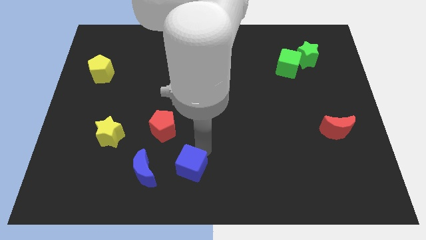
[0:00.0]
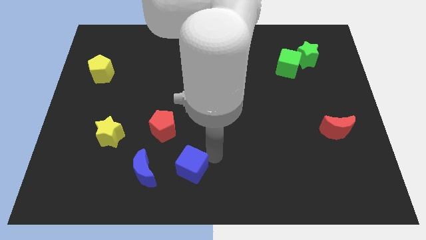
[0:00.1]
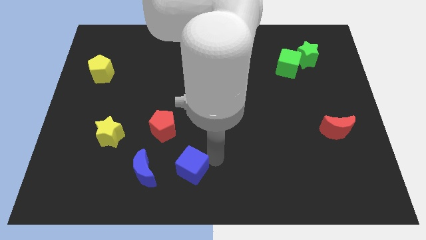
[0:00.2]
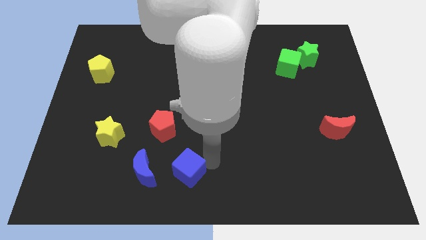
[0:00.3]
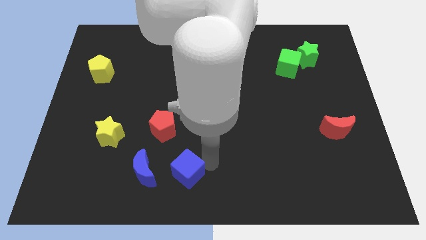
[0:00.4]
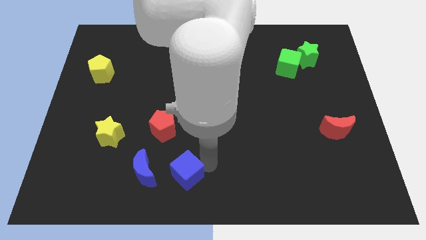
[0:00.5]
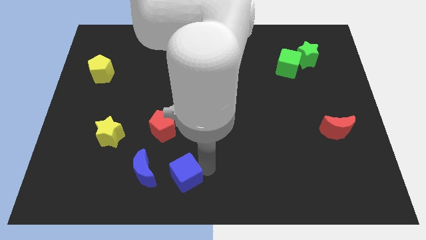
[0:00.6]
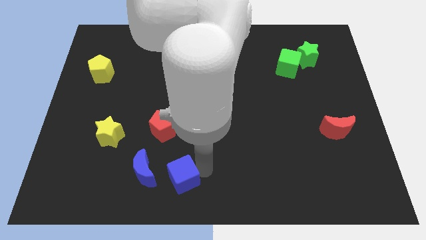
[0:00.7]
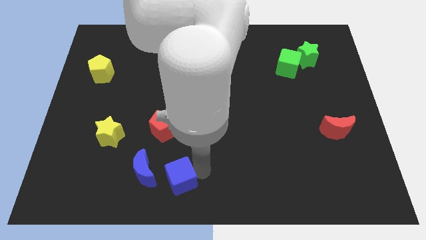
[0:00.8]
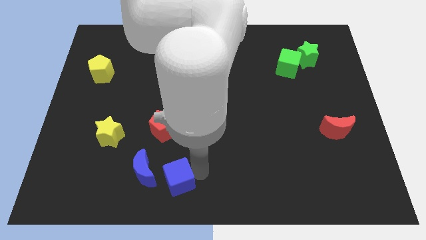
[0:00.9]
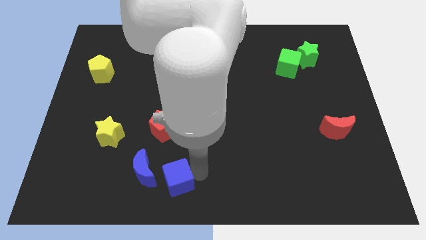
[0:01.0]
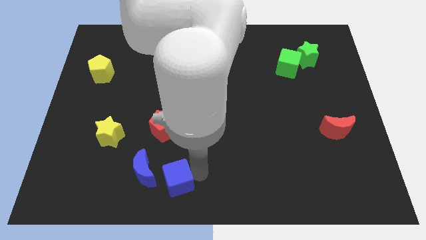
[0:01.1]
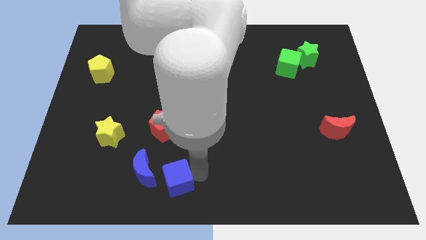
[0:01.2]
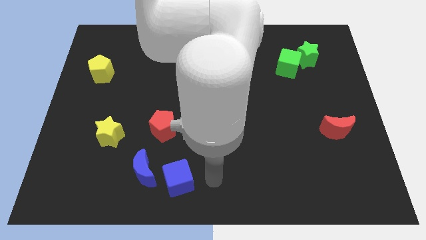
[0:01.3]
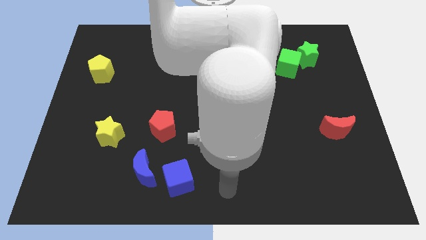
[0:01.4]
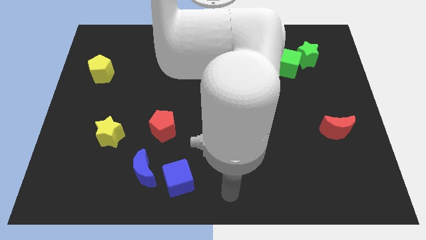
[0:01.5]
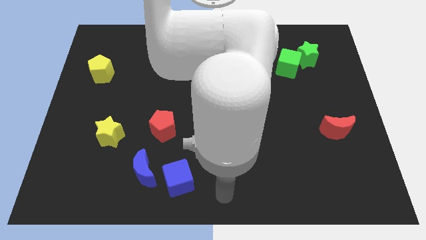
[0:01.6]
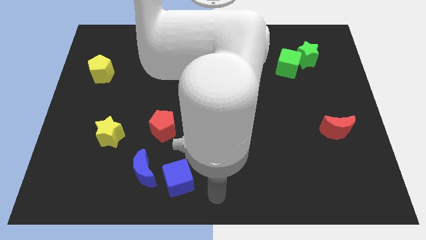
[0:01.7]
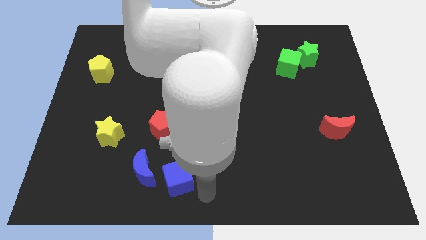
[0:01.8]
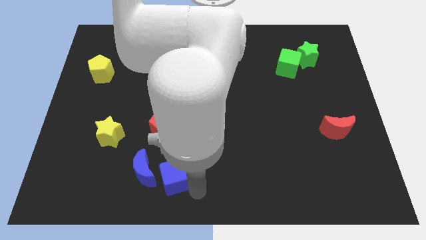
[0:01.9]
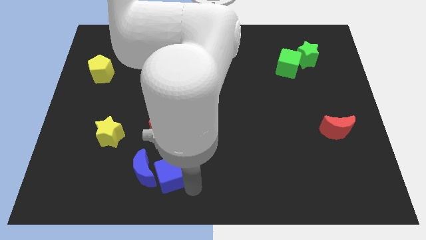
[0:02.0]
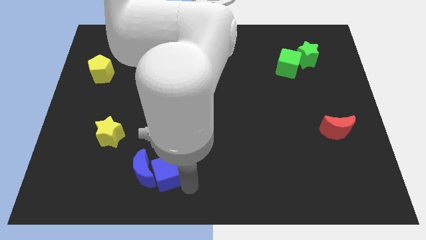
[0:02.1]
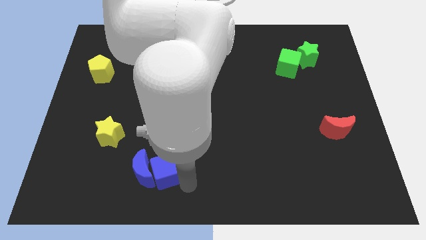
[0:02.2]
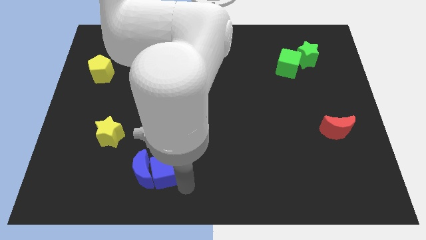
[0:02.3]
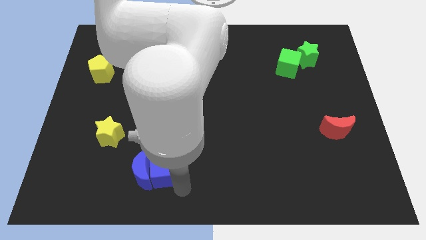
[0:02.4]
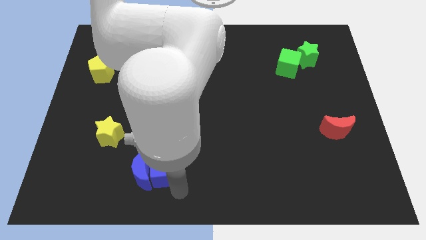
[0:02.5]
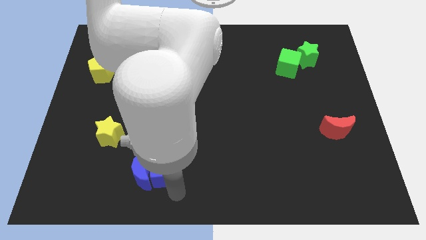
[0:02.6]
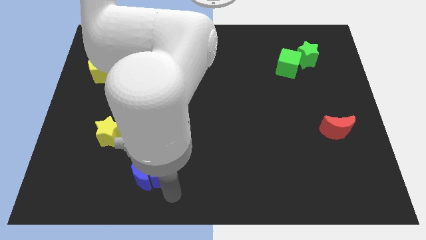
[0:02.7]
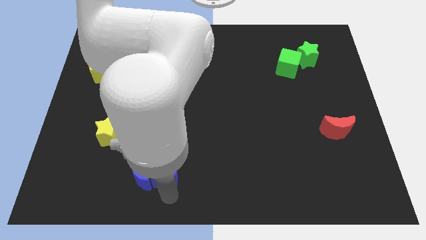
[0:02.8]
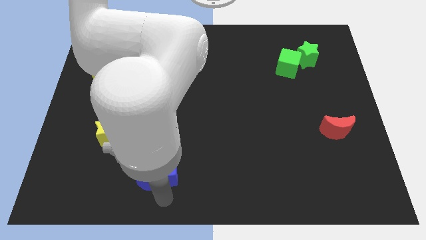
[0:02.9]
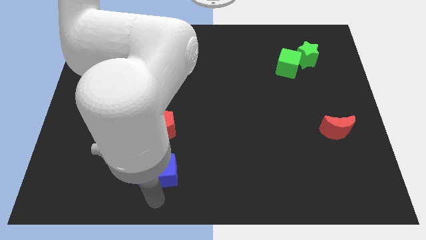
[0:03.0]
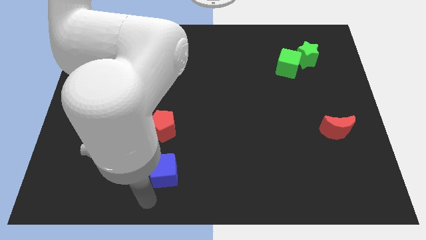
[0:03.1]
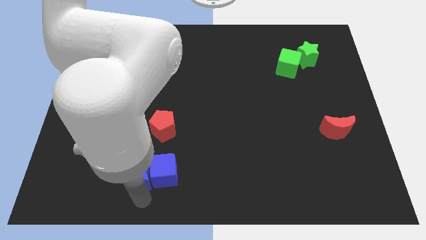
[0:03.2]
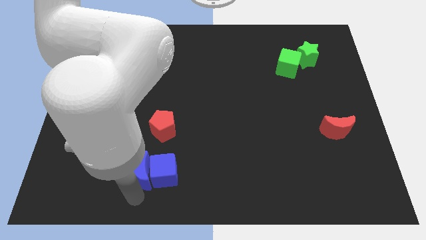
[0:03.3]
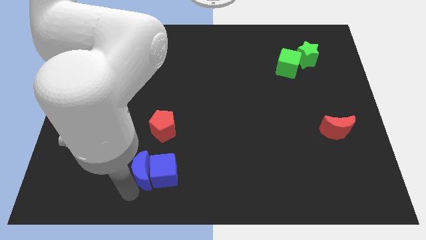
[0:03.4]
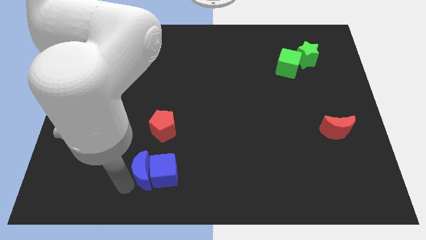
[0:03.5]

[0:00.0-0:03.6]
push the blue cube close to the blue crescent

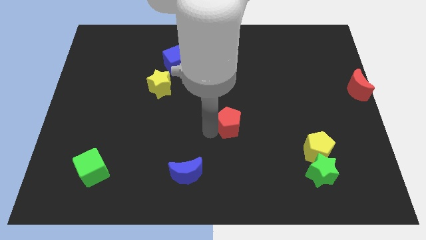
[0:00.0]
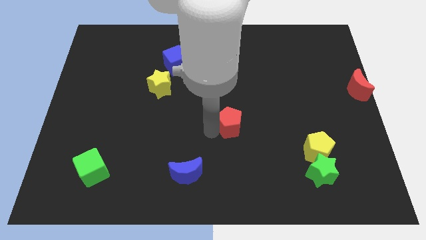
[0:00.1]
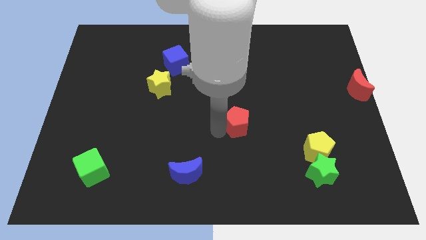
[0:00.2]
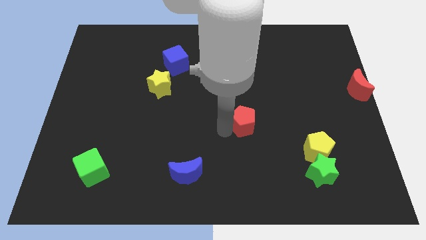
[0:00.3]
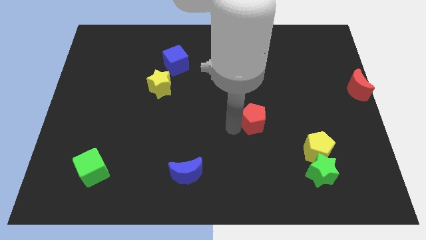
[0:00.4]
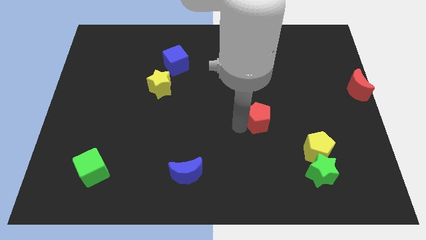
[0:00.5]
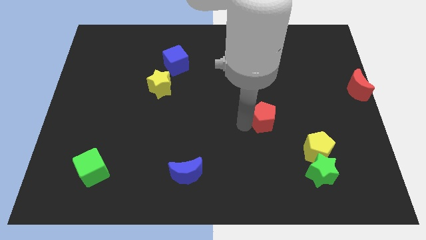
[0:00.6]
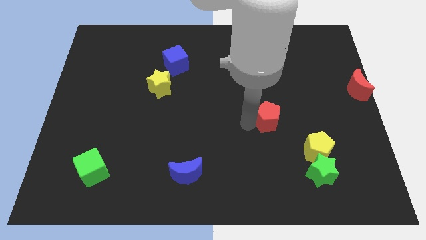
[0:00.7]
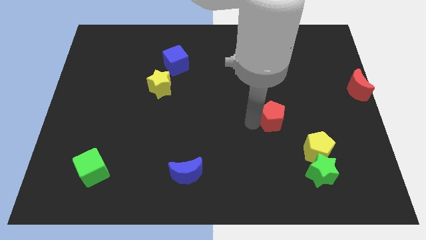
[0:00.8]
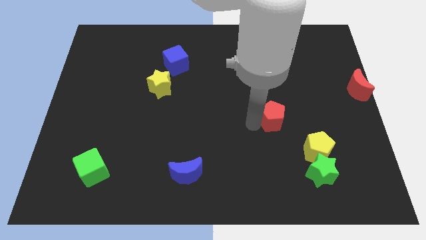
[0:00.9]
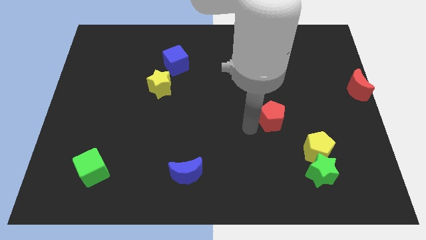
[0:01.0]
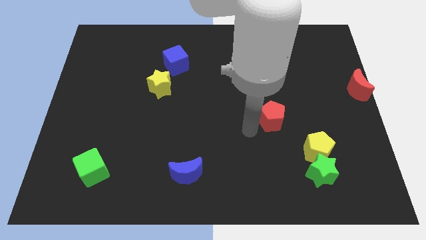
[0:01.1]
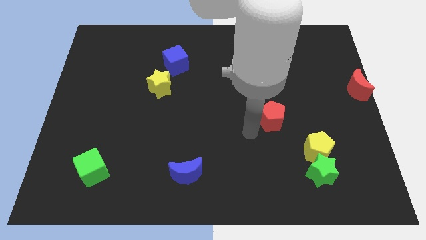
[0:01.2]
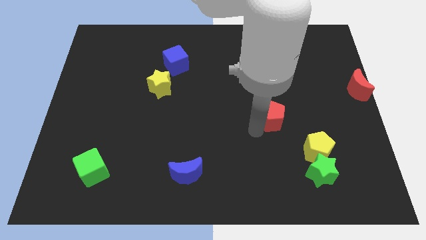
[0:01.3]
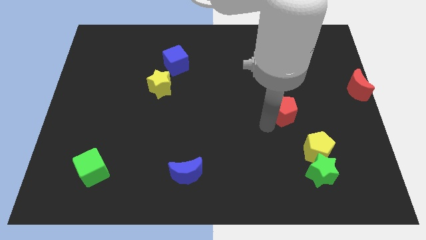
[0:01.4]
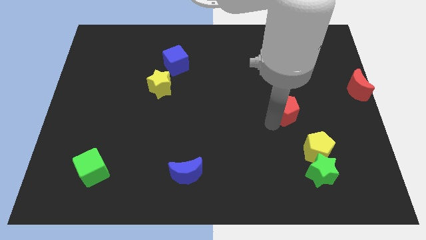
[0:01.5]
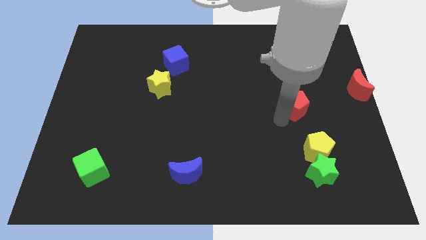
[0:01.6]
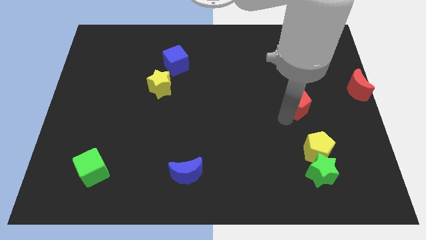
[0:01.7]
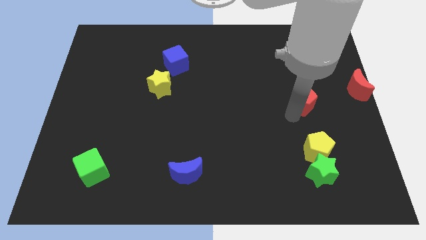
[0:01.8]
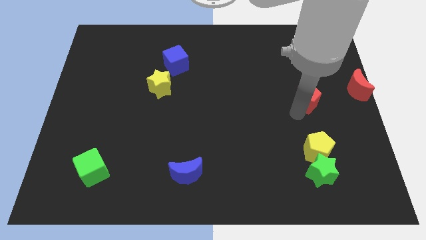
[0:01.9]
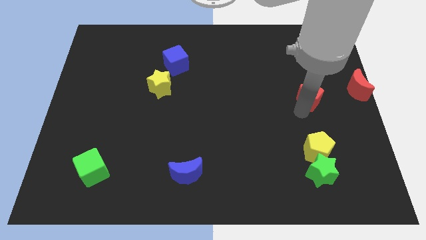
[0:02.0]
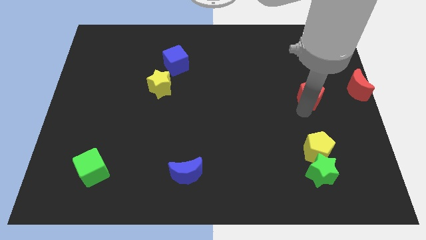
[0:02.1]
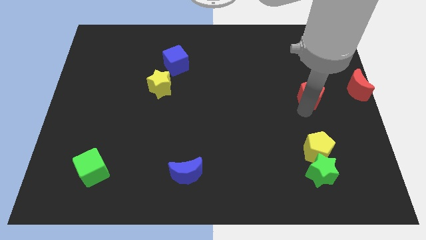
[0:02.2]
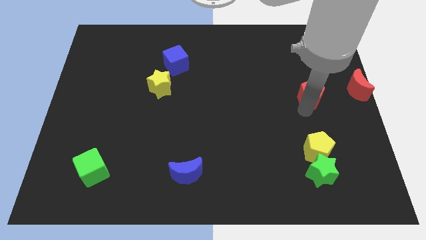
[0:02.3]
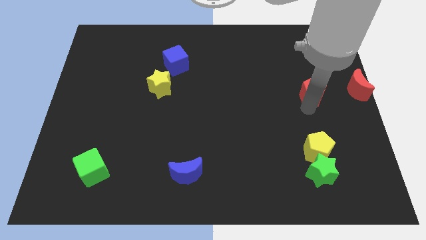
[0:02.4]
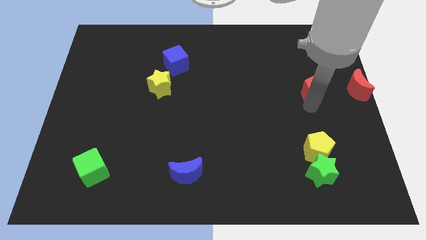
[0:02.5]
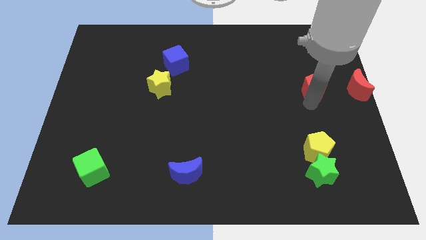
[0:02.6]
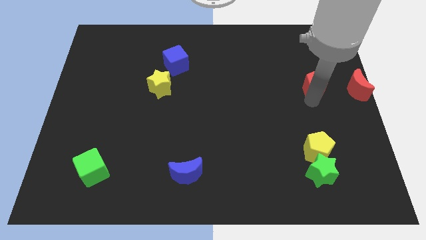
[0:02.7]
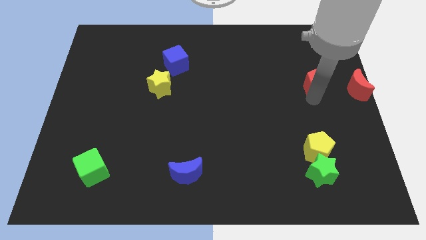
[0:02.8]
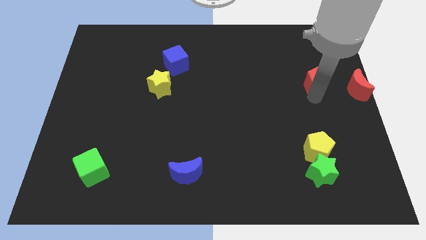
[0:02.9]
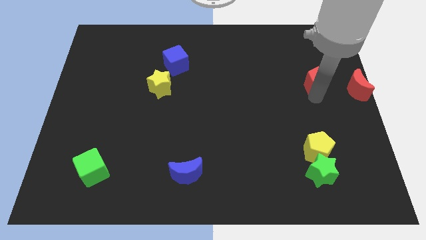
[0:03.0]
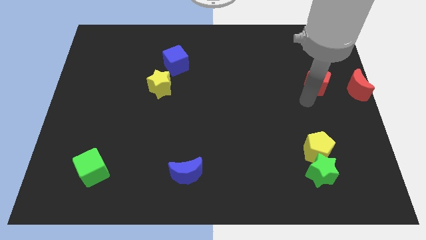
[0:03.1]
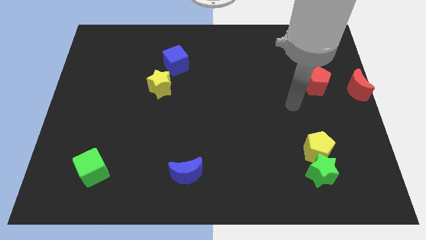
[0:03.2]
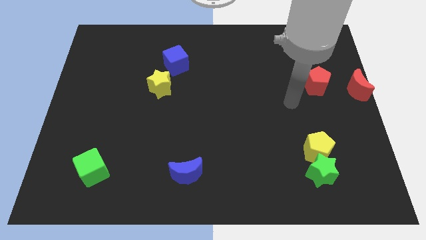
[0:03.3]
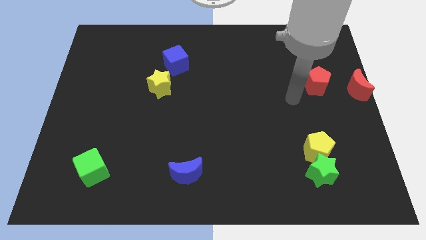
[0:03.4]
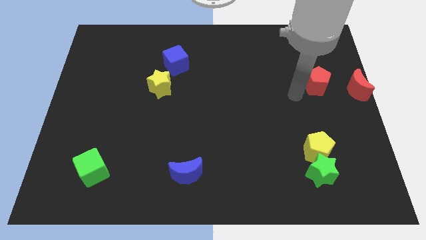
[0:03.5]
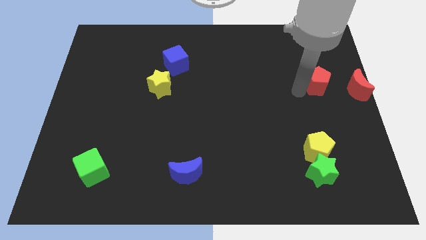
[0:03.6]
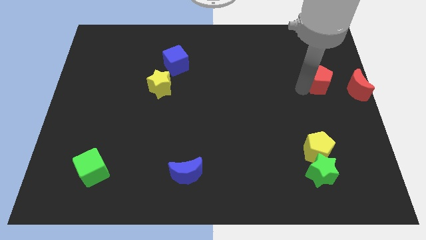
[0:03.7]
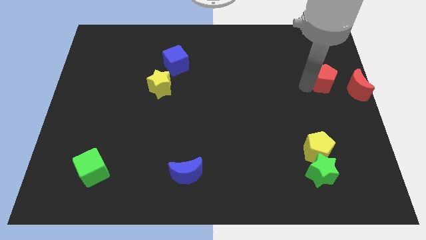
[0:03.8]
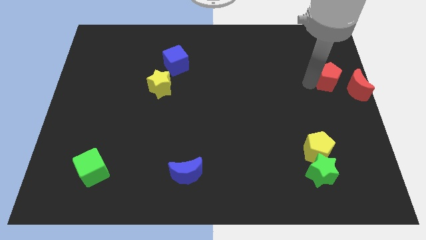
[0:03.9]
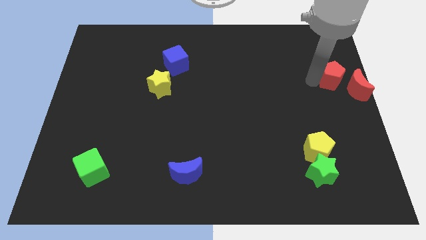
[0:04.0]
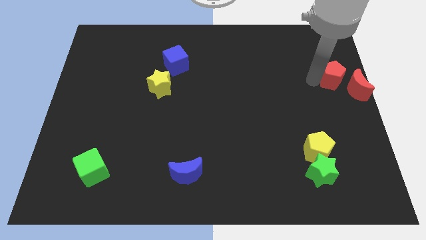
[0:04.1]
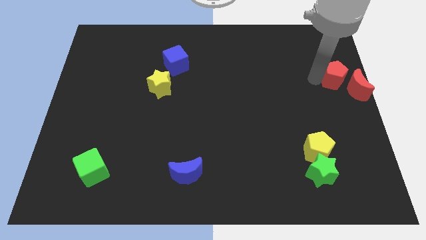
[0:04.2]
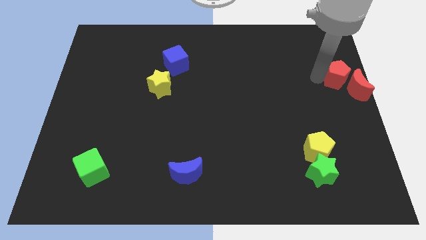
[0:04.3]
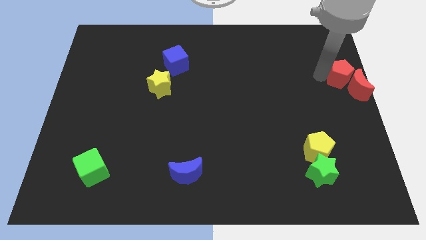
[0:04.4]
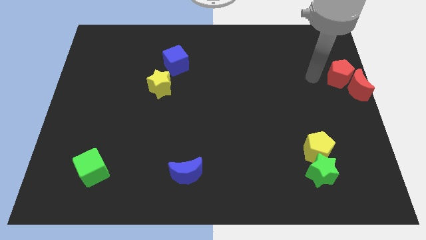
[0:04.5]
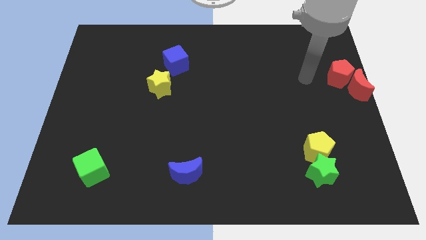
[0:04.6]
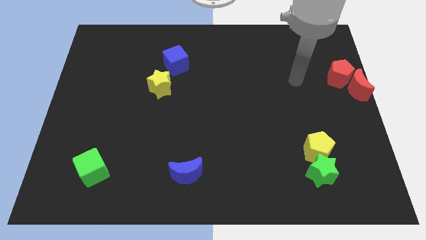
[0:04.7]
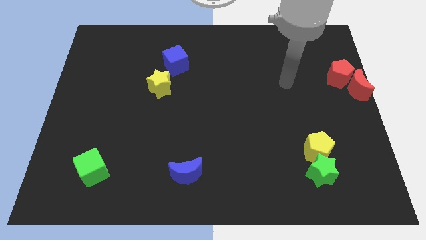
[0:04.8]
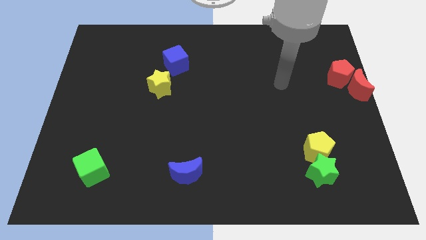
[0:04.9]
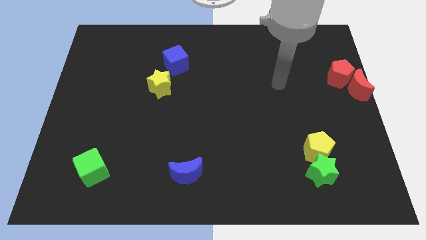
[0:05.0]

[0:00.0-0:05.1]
move red pentagon above red moon

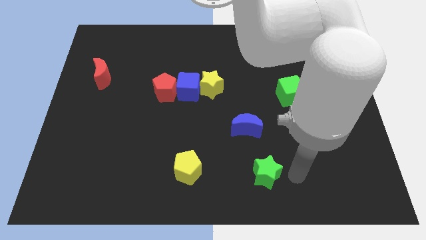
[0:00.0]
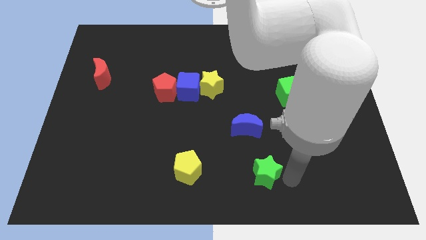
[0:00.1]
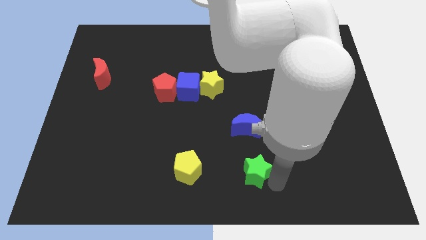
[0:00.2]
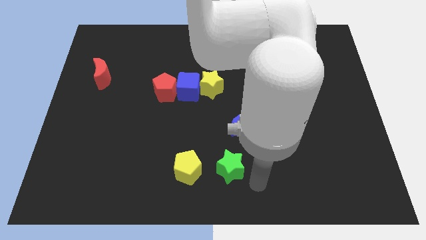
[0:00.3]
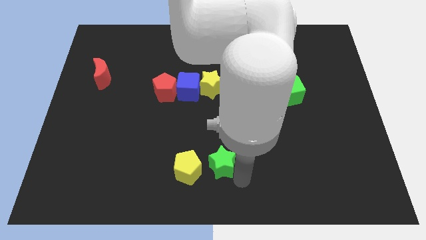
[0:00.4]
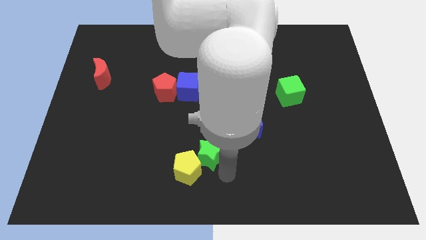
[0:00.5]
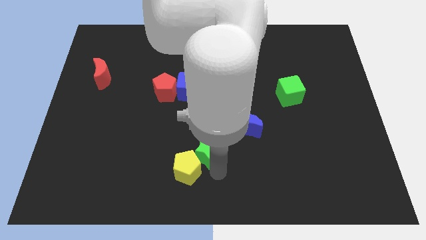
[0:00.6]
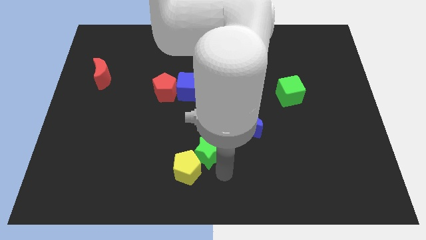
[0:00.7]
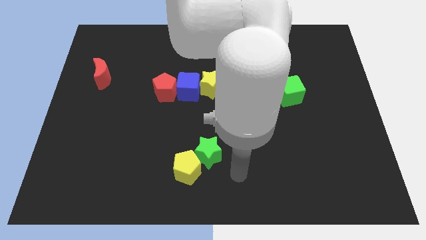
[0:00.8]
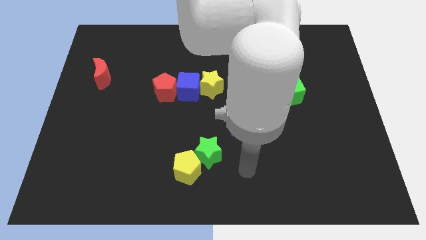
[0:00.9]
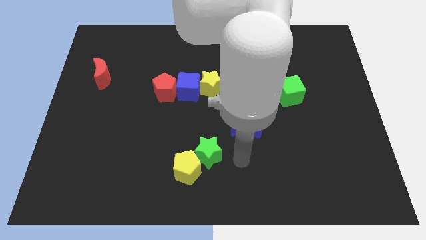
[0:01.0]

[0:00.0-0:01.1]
attach the green star to the yellow pentagon
